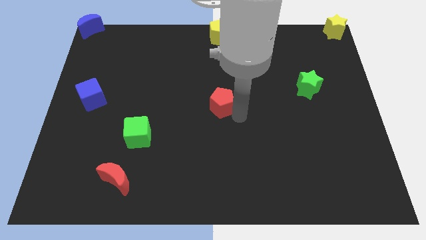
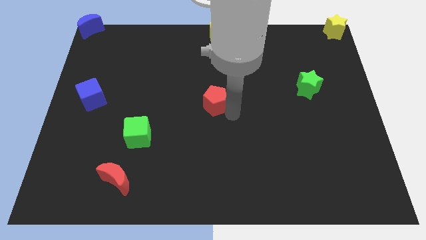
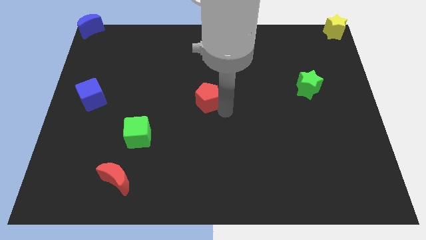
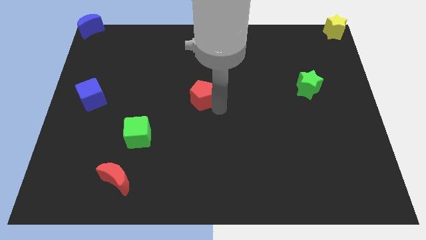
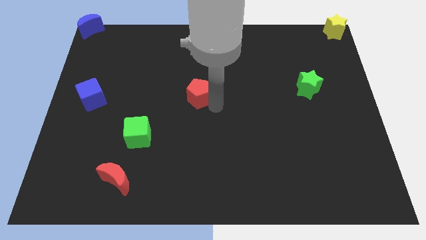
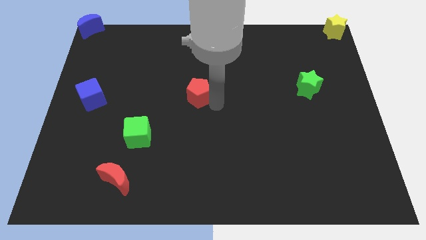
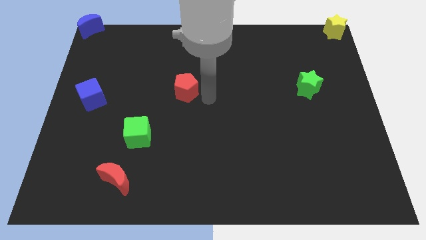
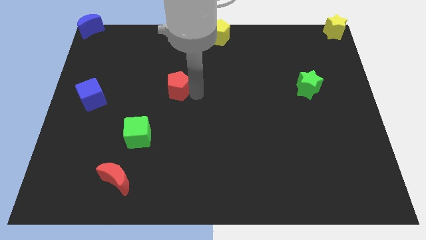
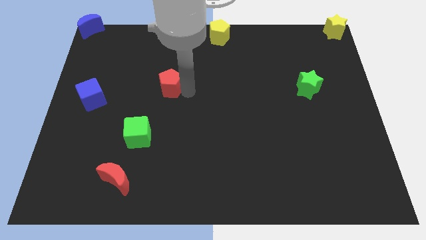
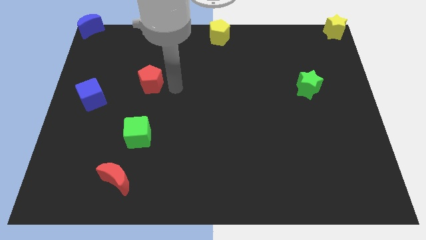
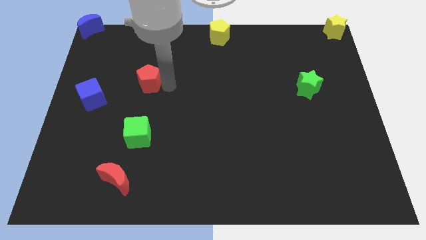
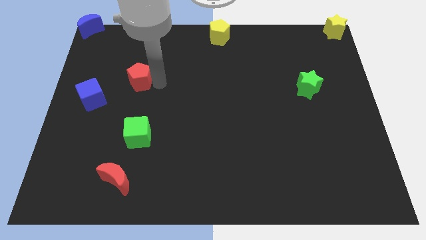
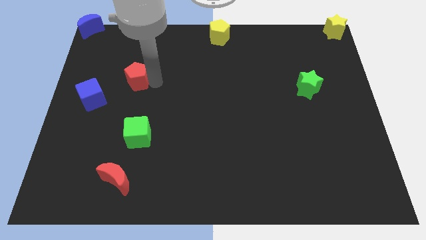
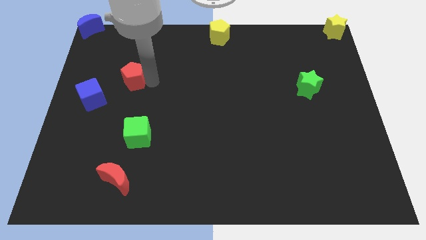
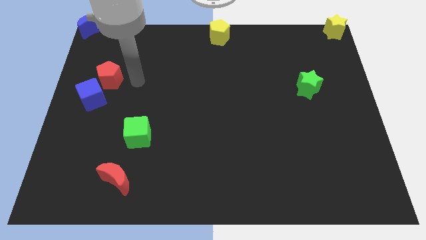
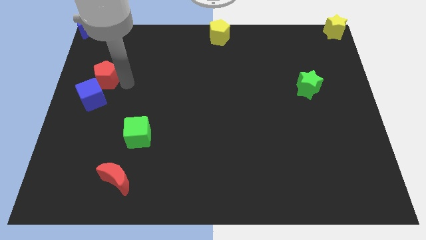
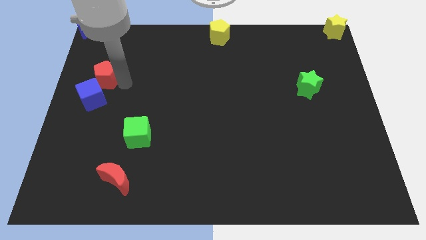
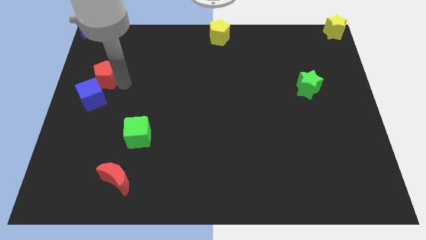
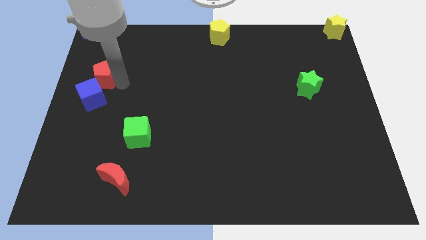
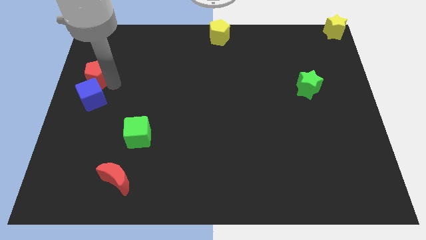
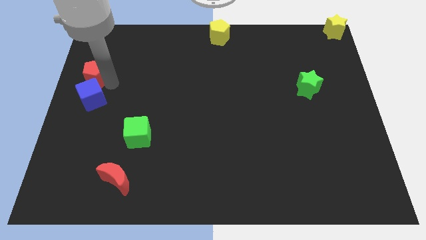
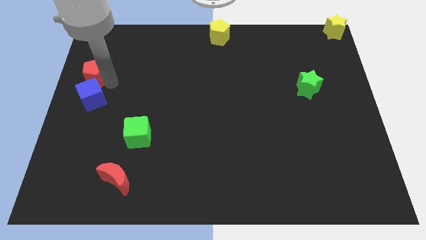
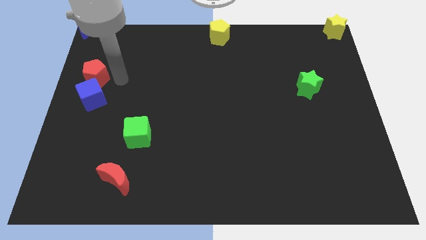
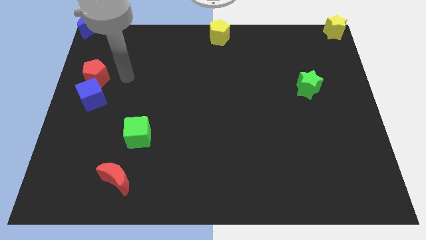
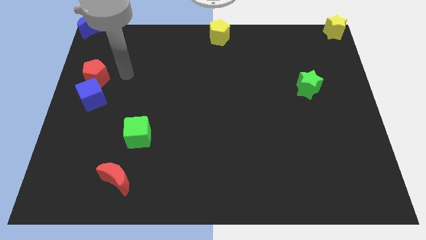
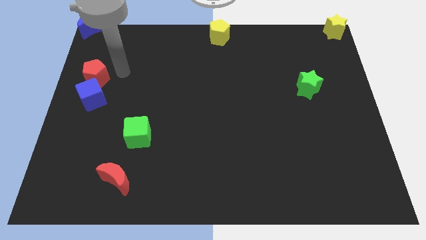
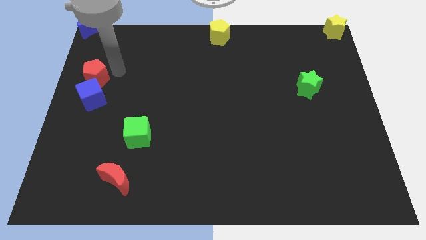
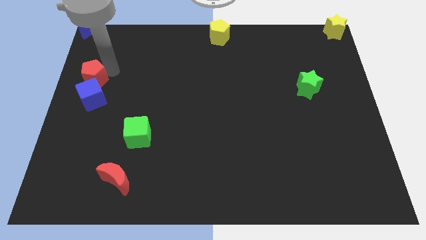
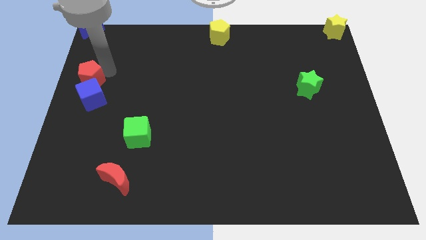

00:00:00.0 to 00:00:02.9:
push red pentagon above blue cube

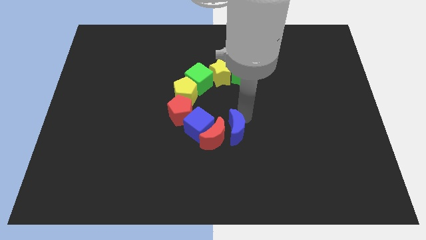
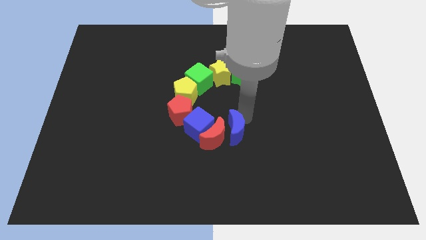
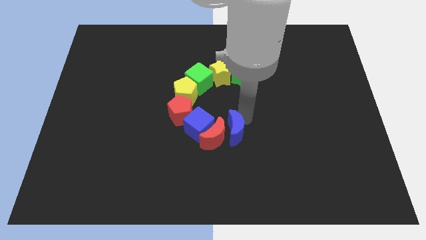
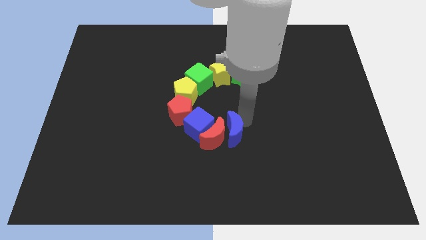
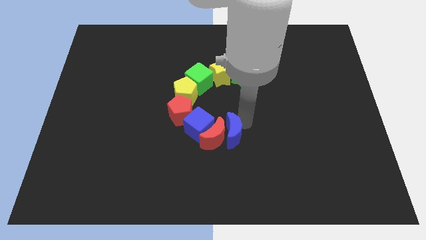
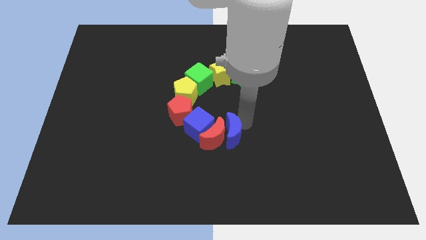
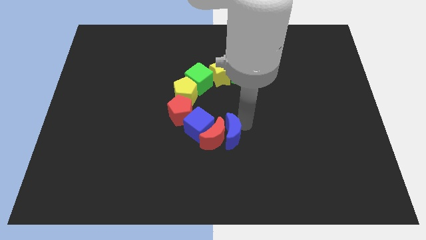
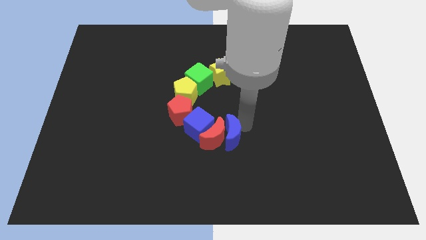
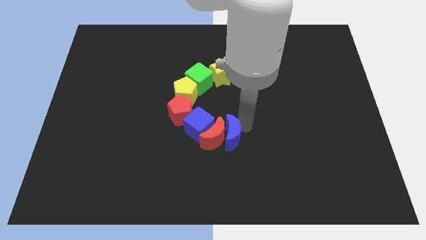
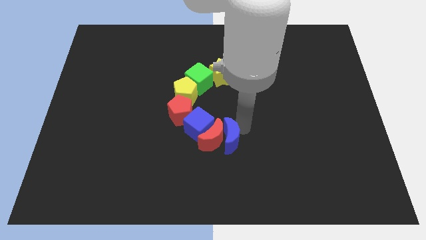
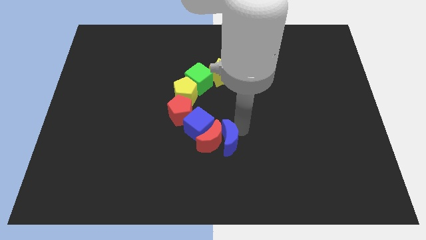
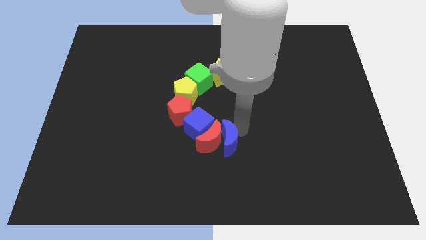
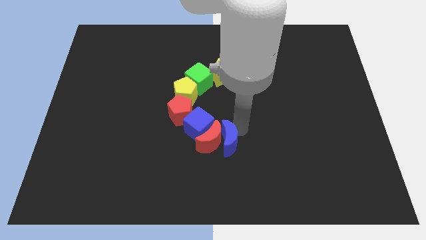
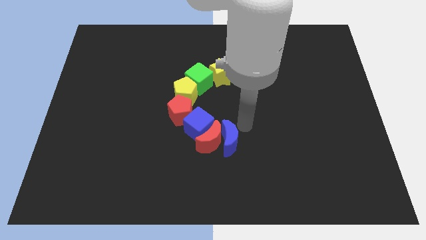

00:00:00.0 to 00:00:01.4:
move the blue moon into the red moon

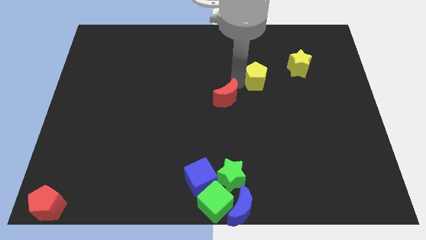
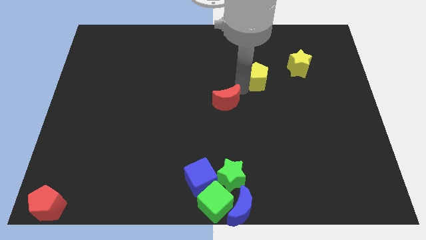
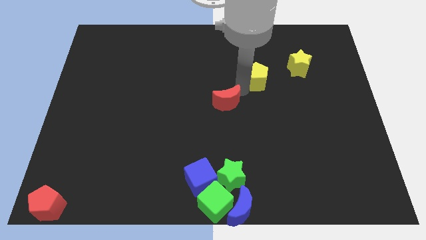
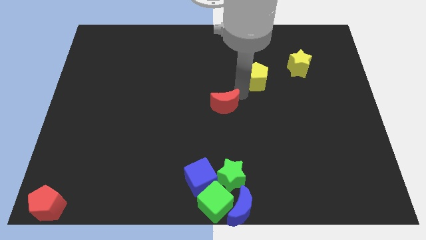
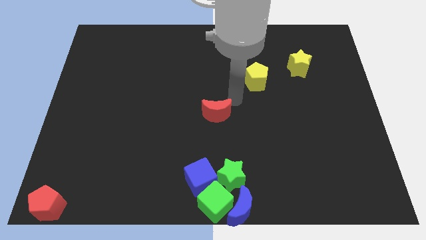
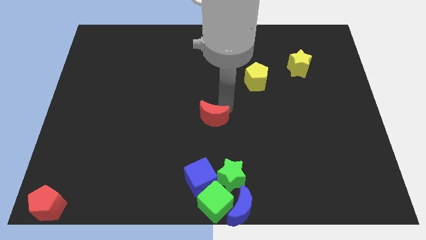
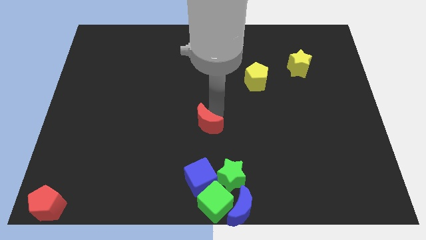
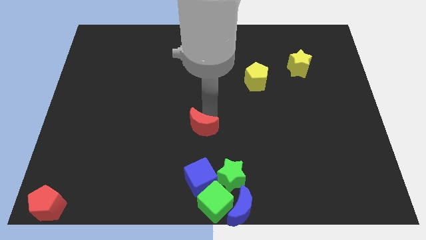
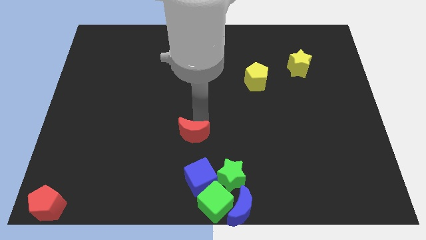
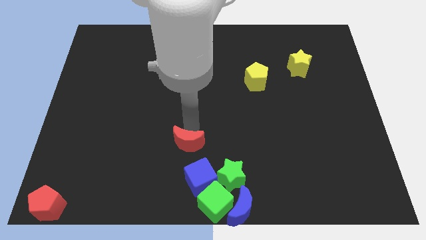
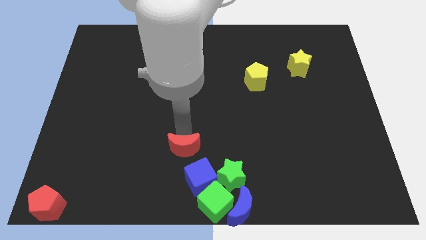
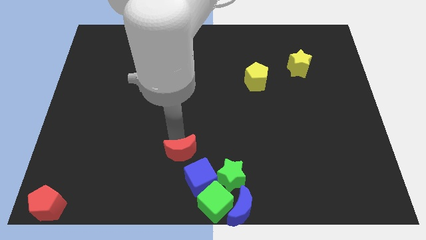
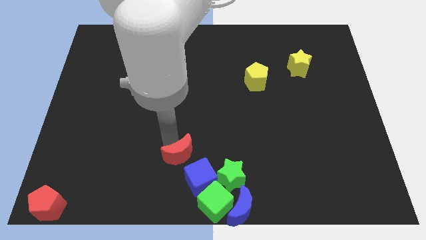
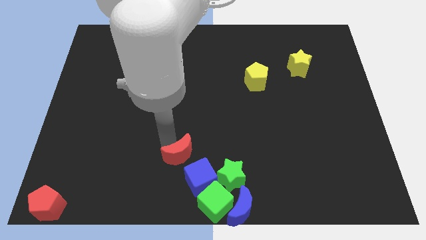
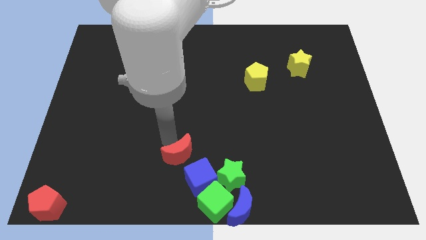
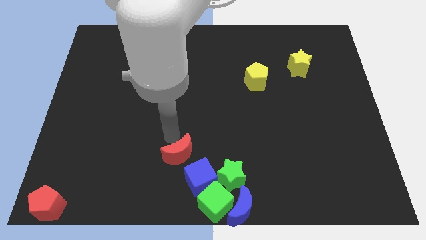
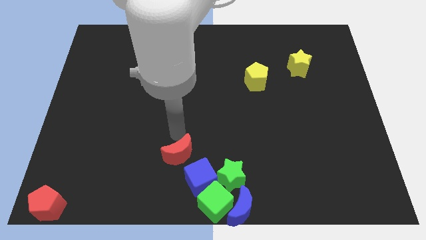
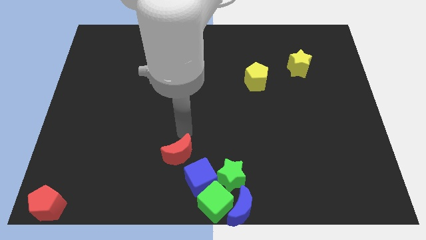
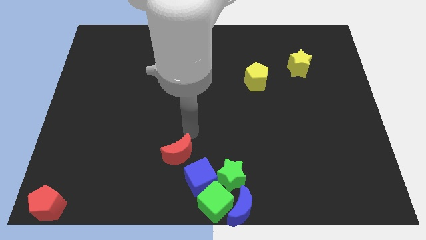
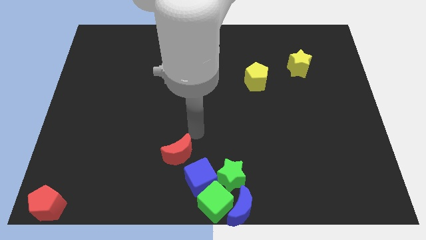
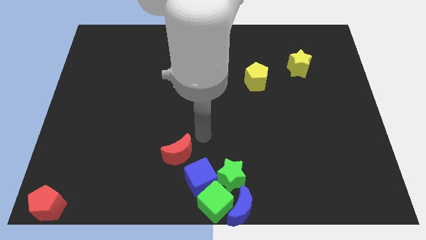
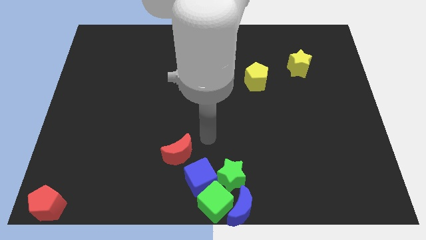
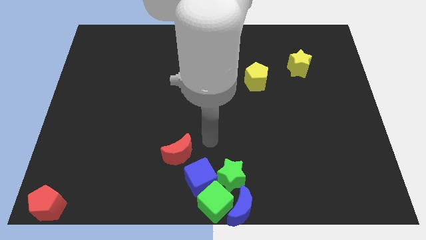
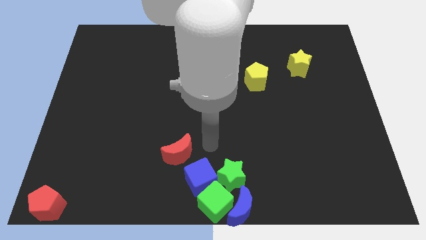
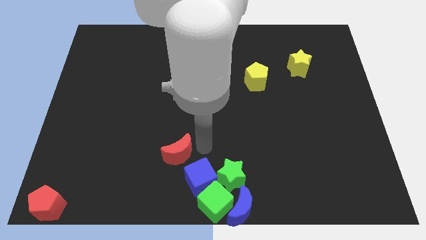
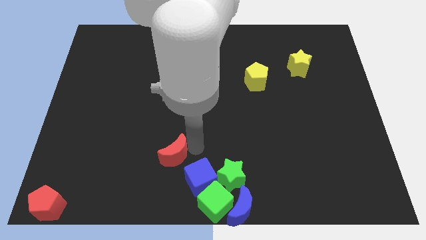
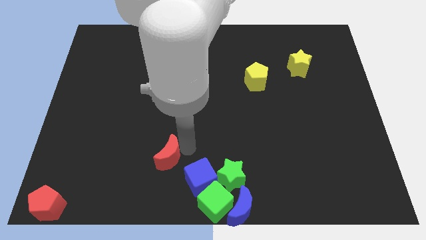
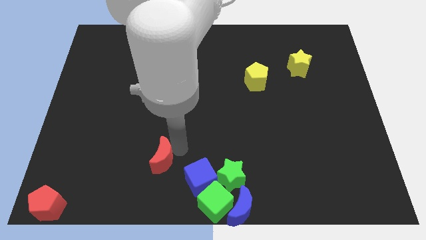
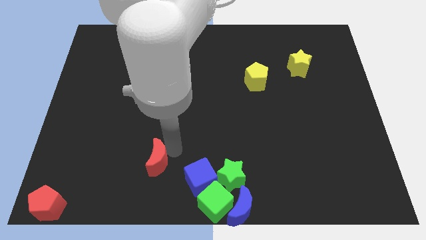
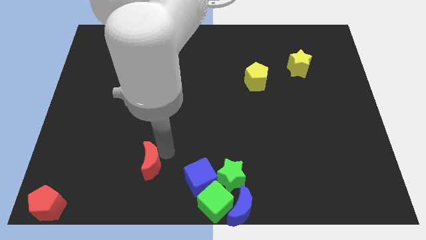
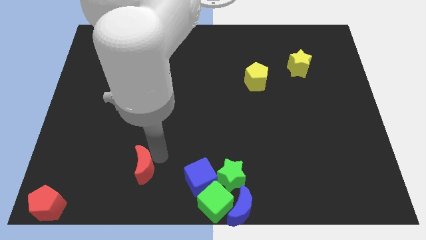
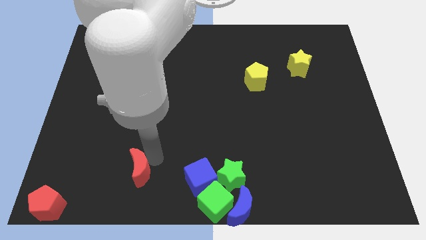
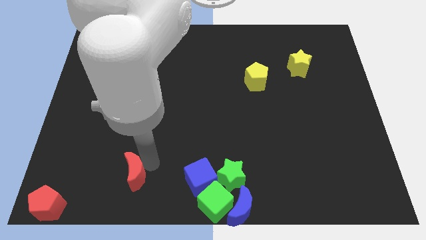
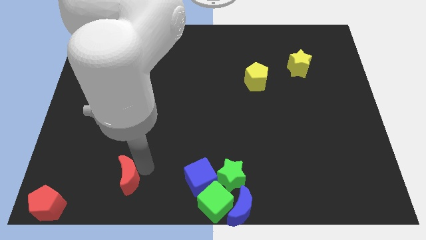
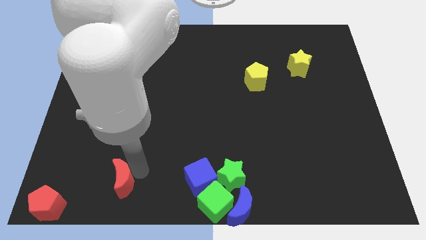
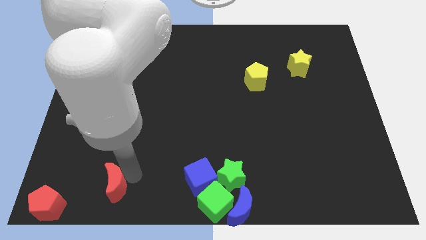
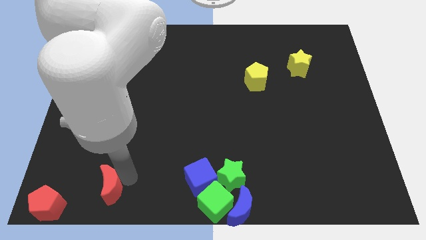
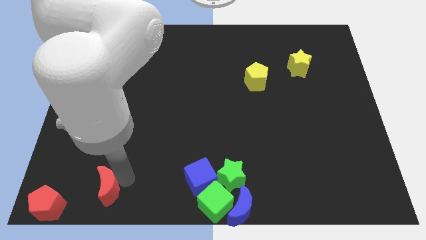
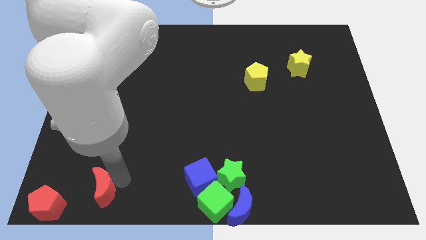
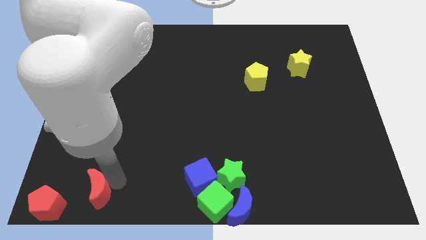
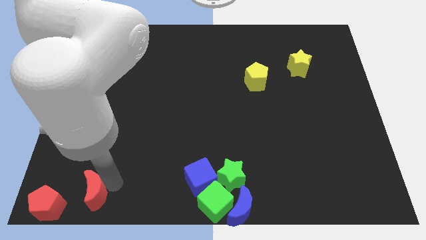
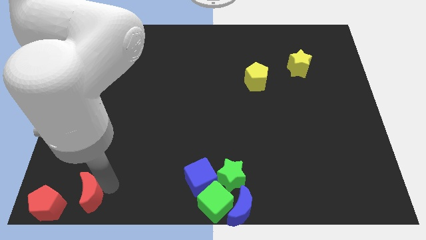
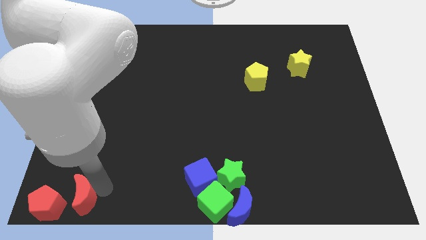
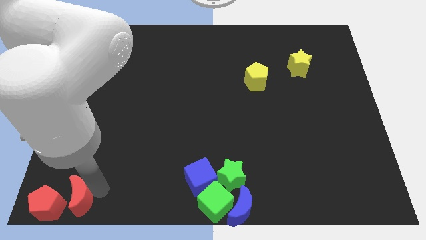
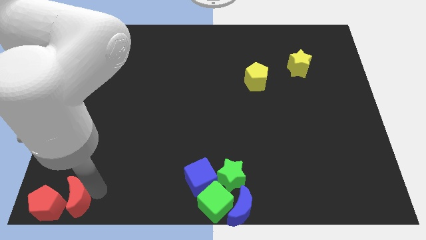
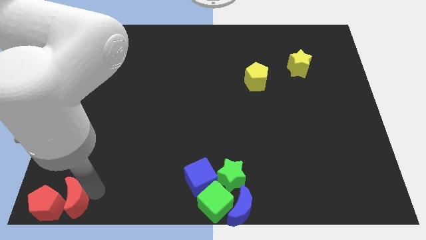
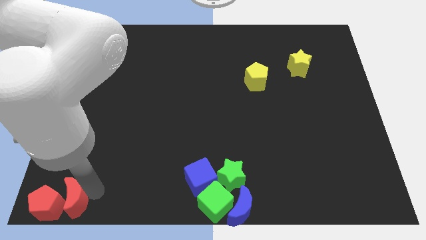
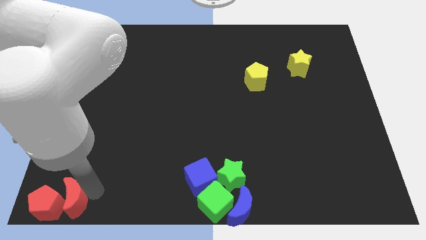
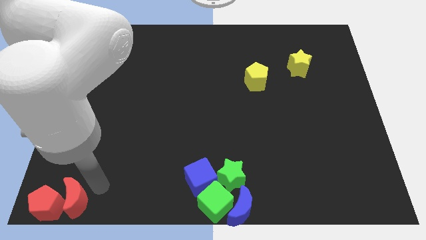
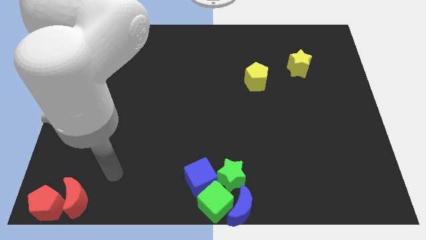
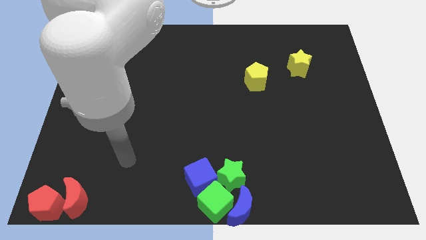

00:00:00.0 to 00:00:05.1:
push red moon into red pentagon
